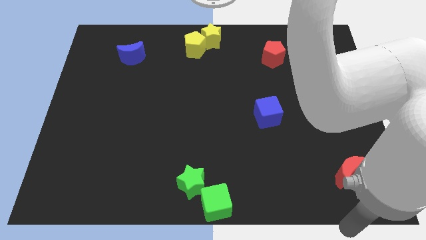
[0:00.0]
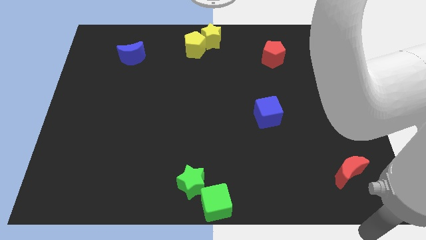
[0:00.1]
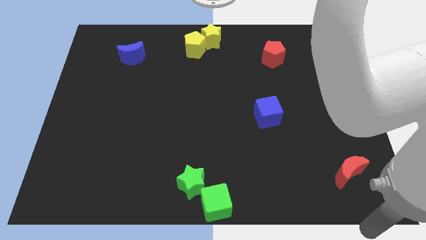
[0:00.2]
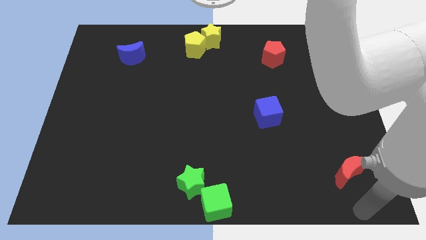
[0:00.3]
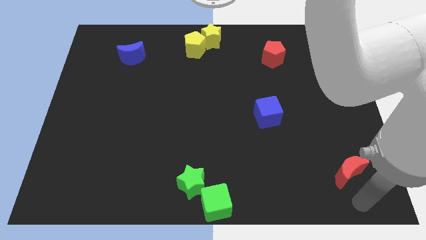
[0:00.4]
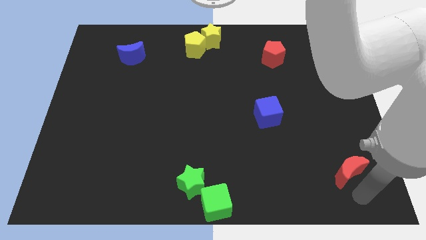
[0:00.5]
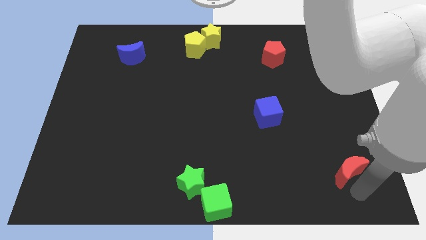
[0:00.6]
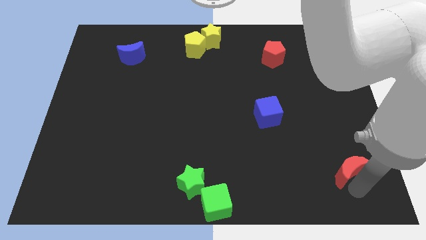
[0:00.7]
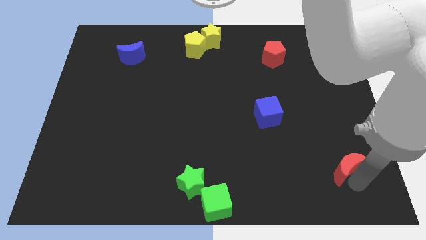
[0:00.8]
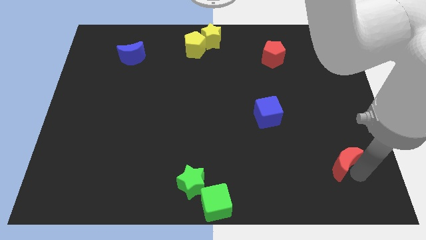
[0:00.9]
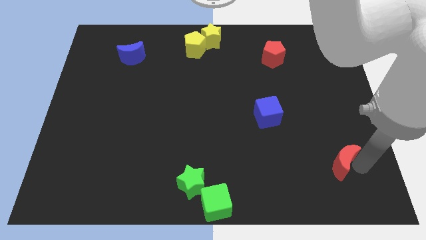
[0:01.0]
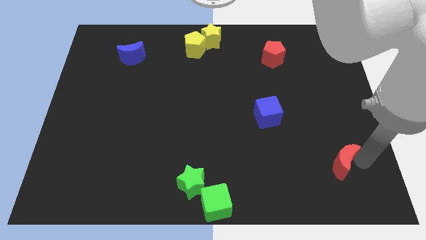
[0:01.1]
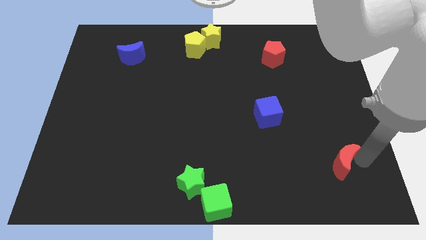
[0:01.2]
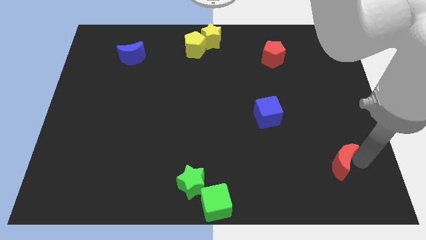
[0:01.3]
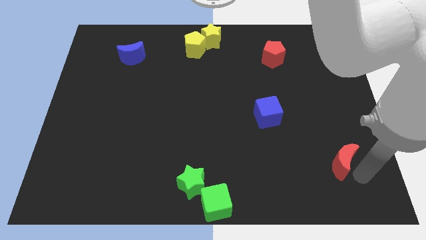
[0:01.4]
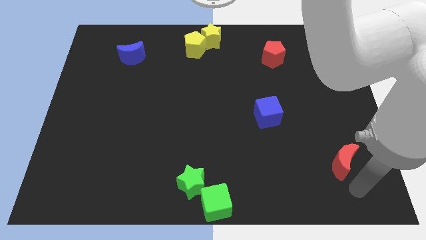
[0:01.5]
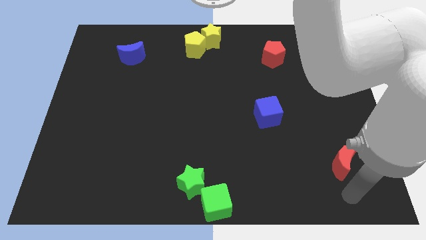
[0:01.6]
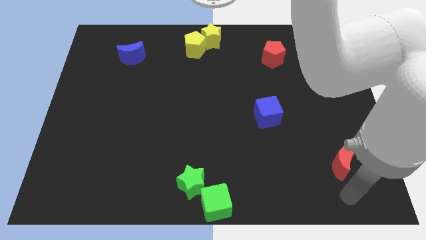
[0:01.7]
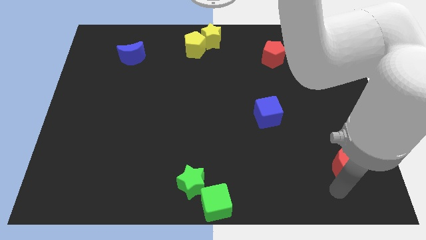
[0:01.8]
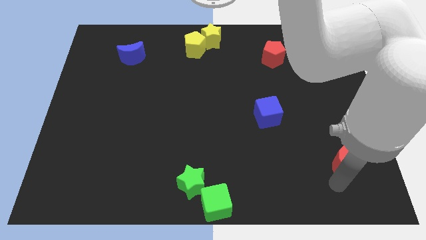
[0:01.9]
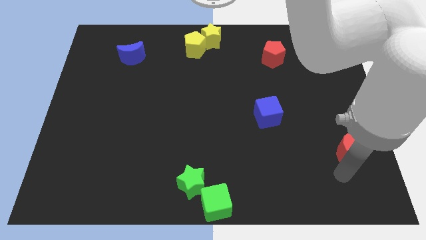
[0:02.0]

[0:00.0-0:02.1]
slightly push the red crescent upwards

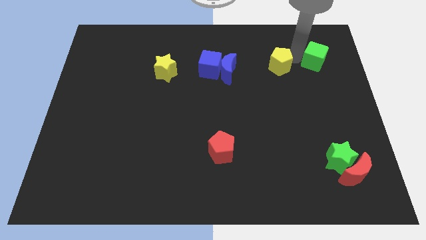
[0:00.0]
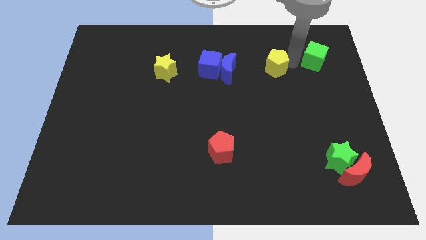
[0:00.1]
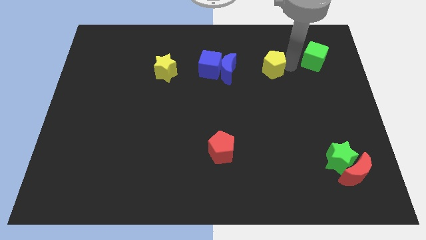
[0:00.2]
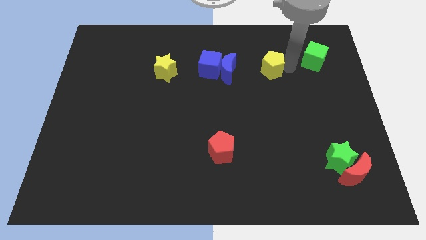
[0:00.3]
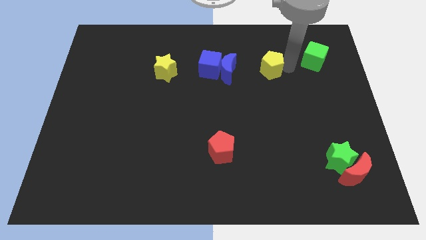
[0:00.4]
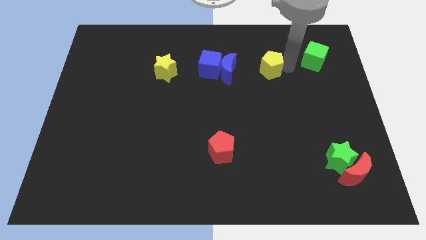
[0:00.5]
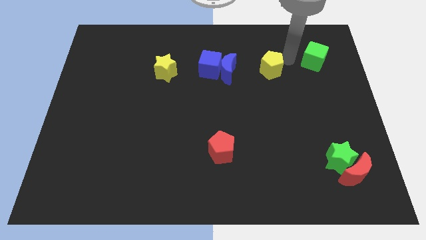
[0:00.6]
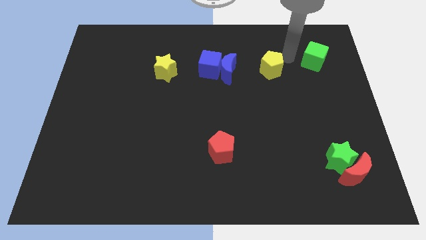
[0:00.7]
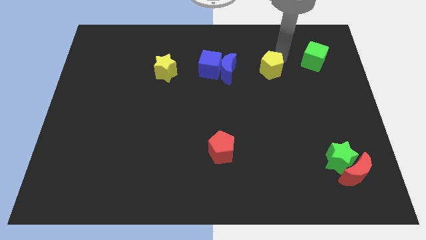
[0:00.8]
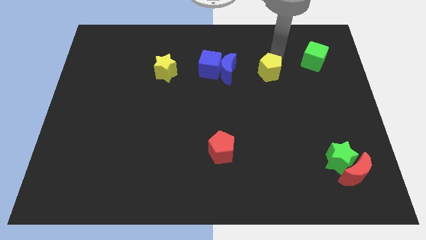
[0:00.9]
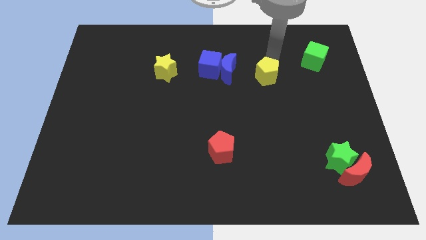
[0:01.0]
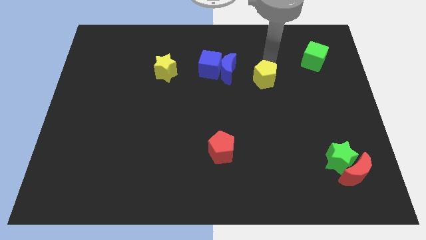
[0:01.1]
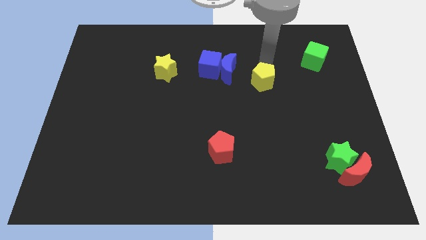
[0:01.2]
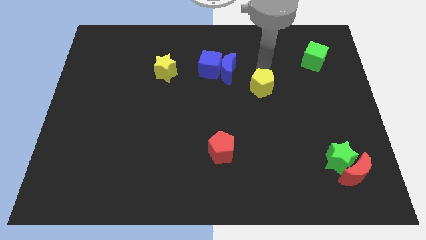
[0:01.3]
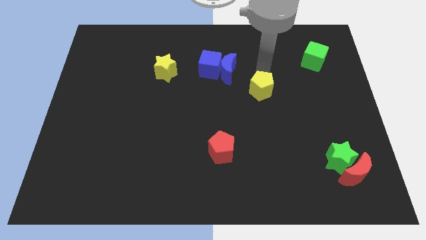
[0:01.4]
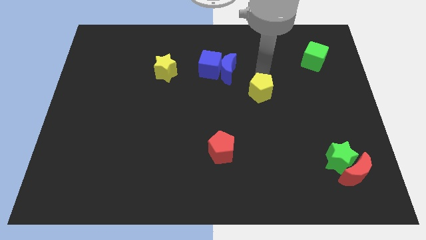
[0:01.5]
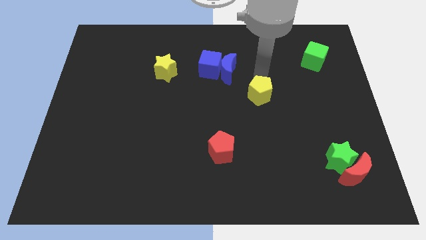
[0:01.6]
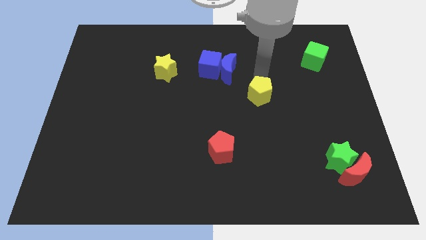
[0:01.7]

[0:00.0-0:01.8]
push the yellow pentagon to the bottom right of the blue crescent

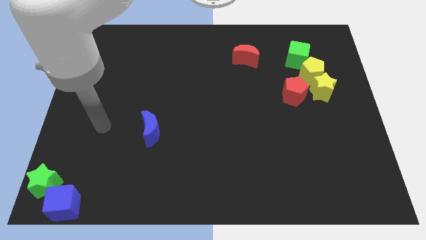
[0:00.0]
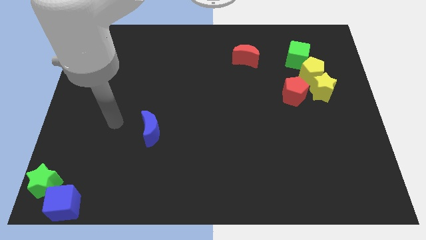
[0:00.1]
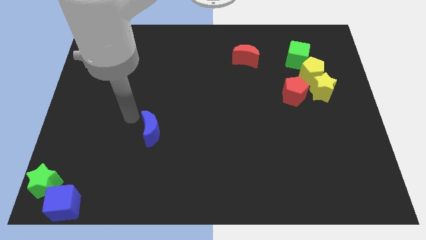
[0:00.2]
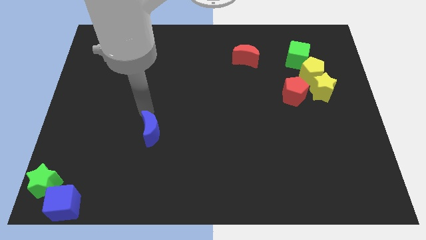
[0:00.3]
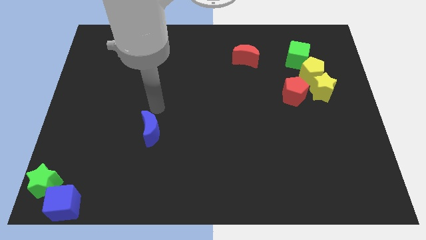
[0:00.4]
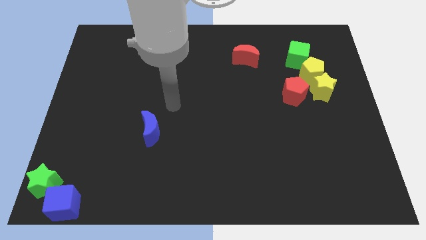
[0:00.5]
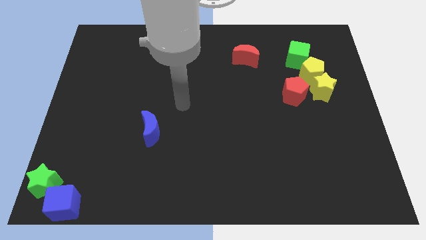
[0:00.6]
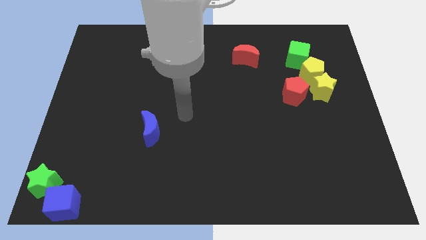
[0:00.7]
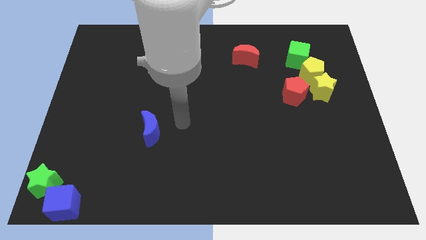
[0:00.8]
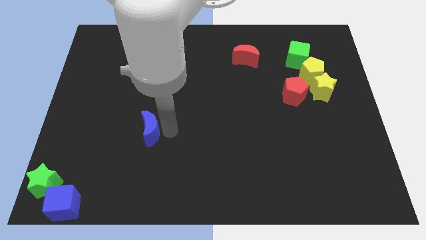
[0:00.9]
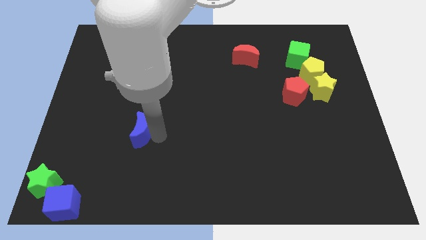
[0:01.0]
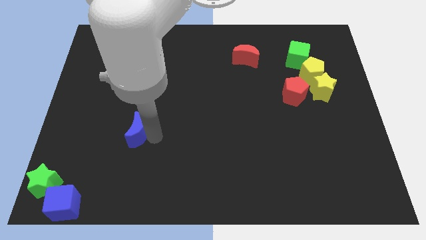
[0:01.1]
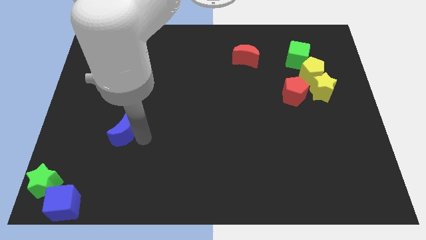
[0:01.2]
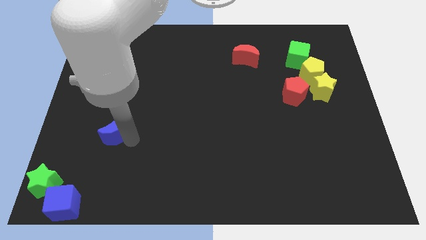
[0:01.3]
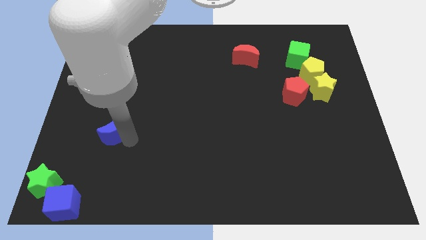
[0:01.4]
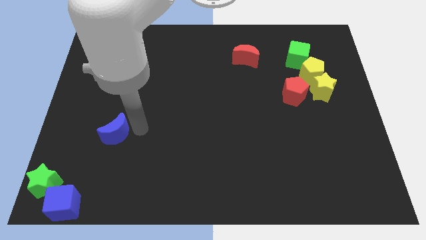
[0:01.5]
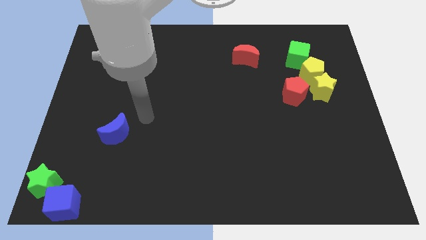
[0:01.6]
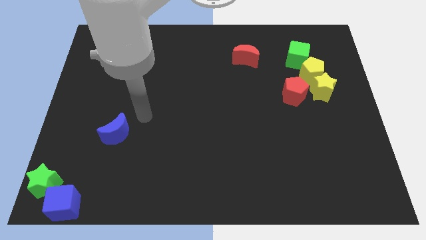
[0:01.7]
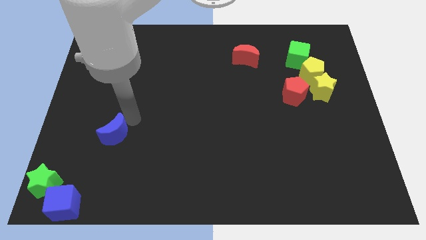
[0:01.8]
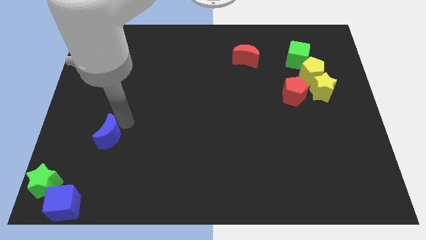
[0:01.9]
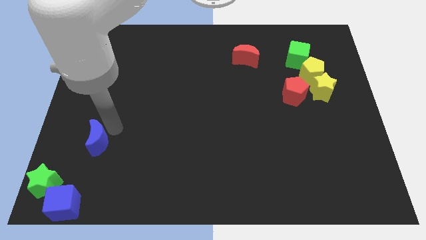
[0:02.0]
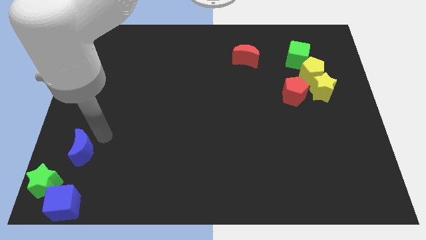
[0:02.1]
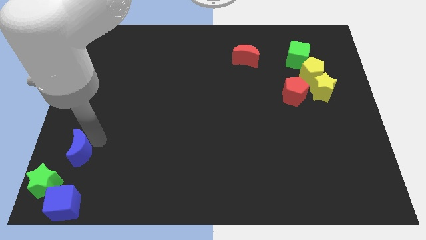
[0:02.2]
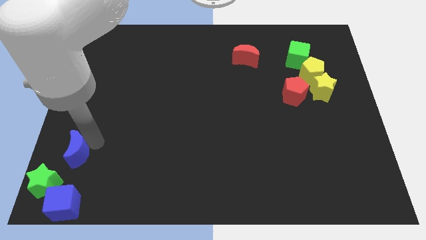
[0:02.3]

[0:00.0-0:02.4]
push the blue crescent to the top of the blue cube

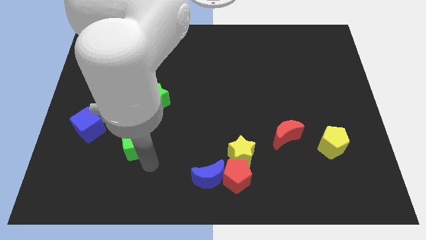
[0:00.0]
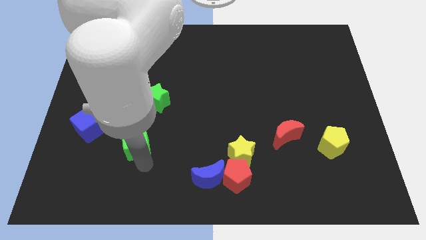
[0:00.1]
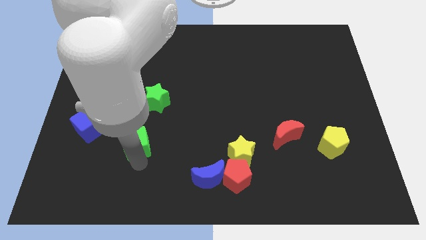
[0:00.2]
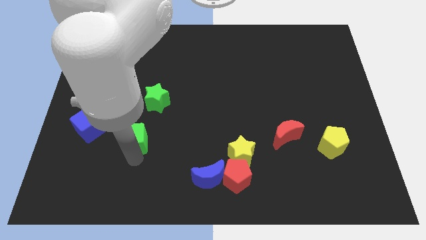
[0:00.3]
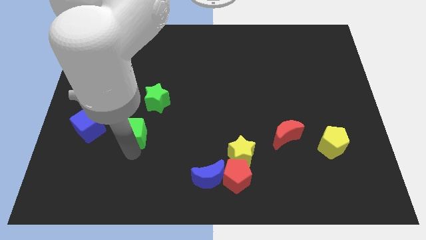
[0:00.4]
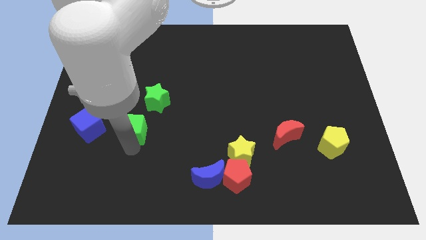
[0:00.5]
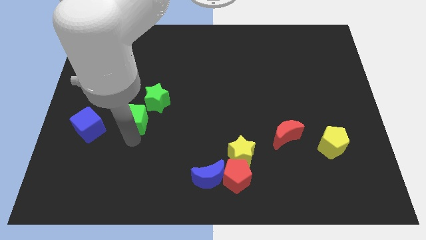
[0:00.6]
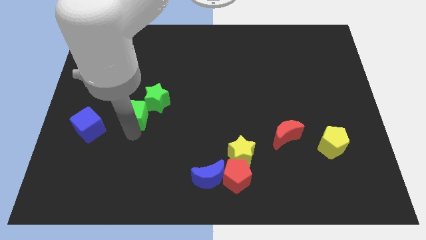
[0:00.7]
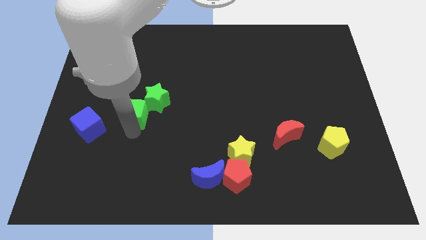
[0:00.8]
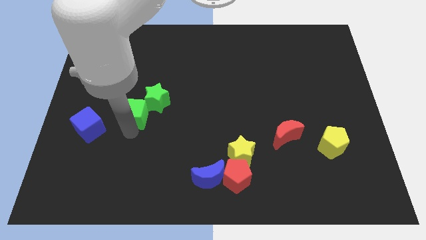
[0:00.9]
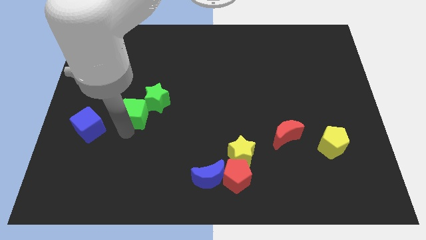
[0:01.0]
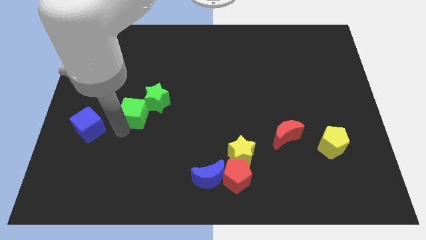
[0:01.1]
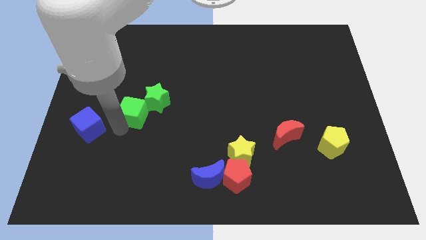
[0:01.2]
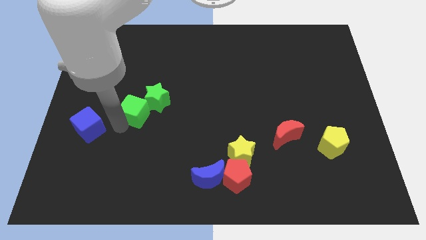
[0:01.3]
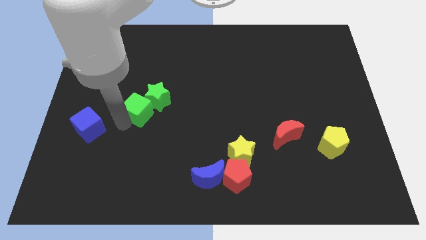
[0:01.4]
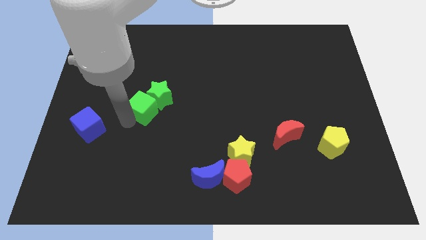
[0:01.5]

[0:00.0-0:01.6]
push the green cube towards the green star

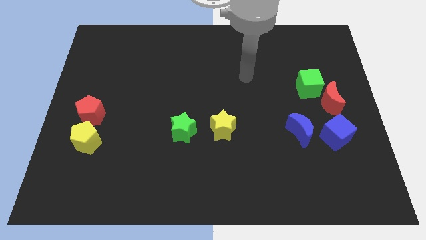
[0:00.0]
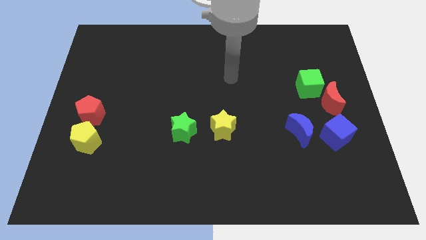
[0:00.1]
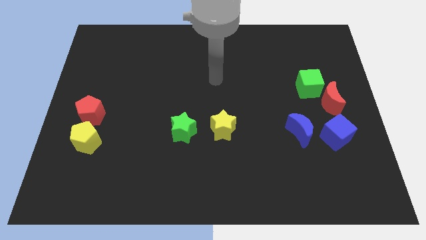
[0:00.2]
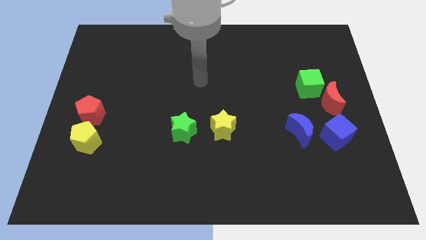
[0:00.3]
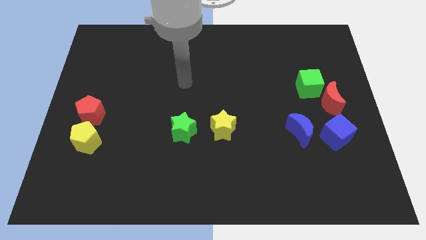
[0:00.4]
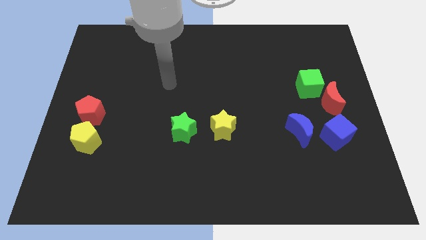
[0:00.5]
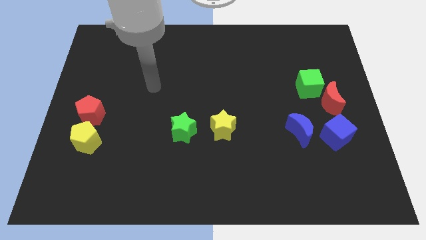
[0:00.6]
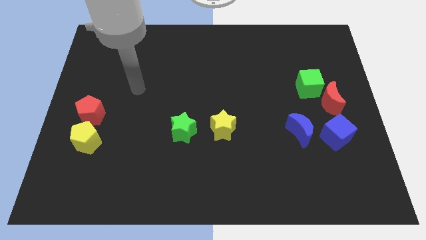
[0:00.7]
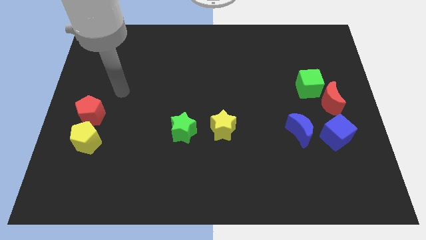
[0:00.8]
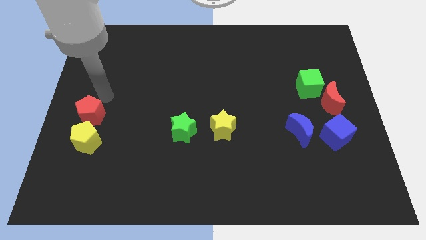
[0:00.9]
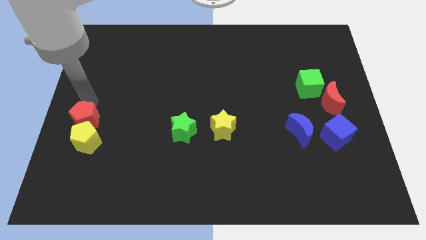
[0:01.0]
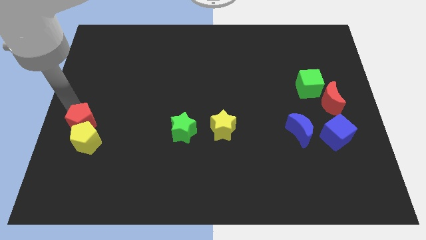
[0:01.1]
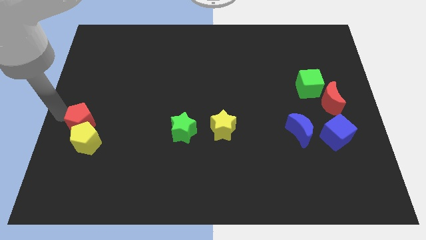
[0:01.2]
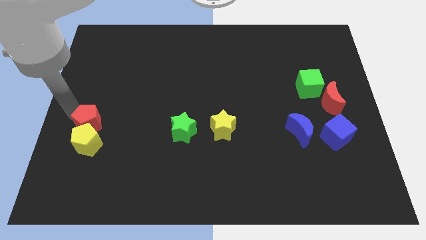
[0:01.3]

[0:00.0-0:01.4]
place the red pentagon into the yellow pentagon
